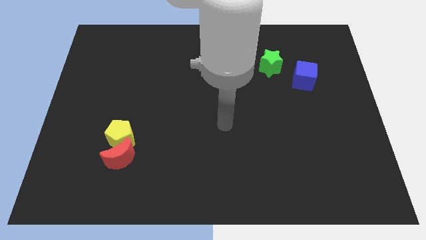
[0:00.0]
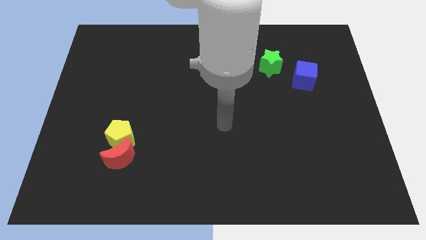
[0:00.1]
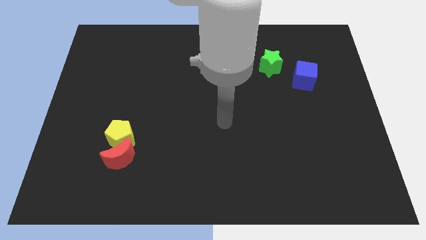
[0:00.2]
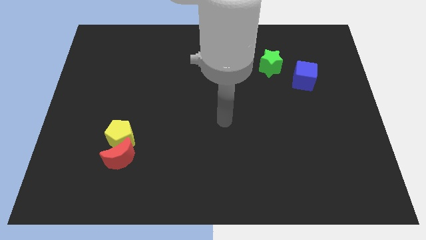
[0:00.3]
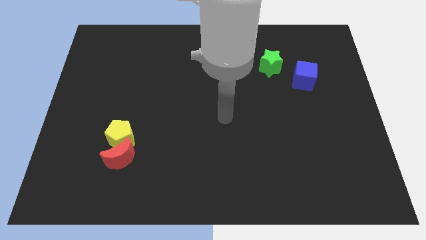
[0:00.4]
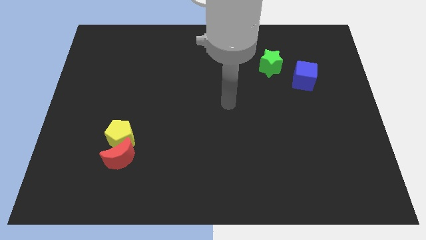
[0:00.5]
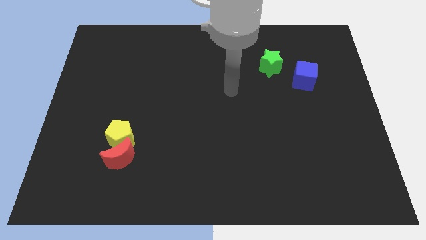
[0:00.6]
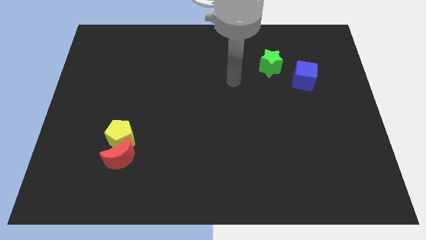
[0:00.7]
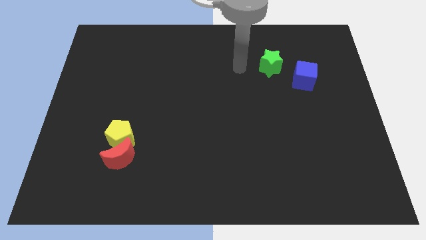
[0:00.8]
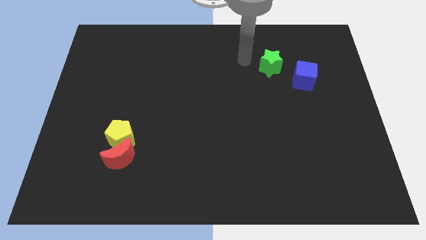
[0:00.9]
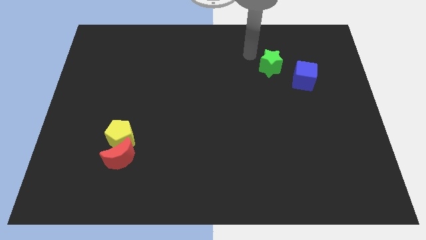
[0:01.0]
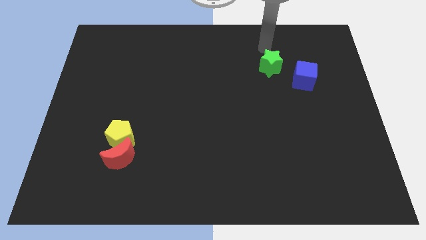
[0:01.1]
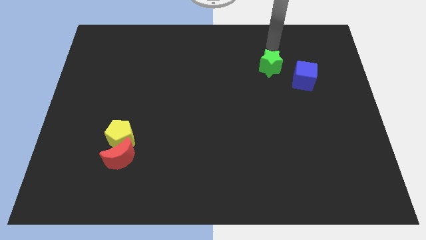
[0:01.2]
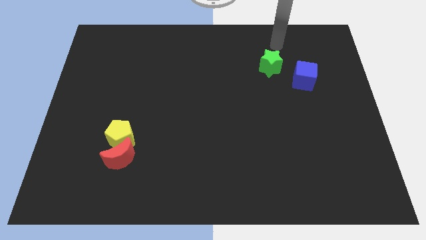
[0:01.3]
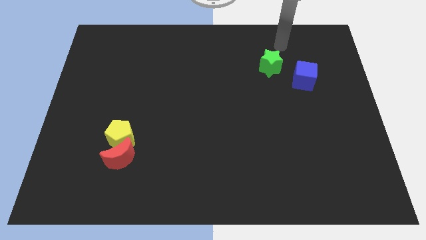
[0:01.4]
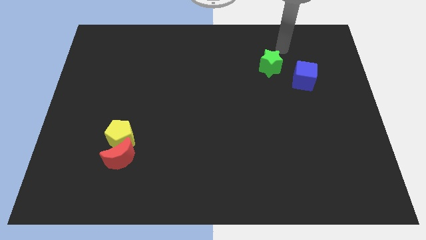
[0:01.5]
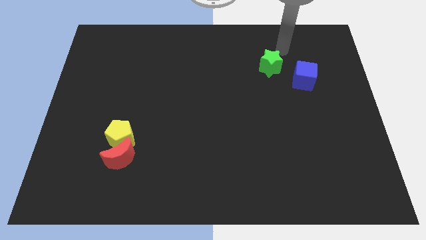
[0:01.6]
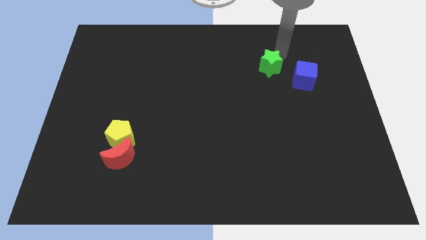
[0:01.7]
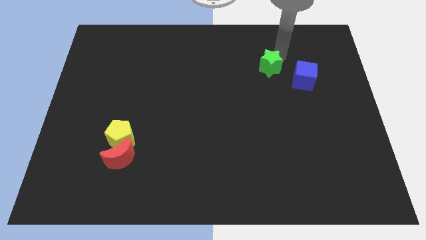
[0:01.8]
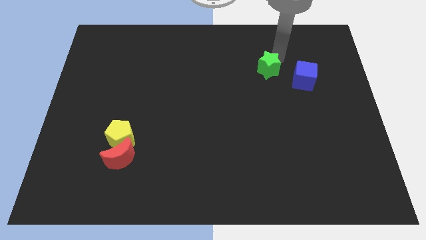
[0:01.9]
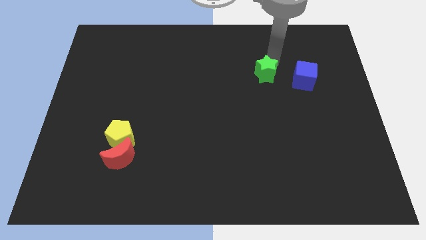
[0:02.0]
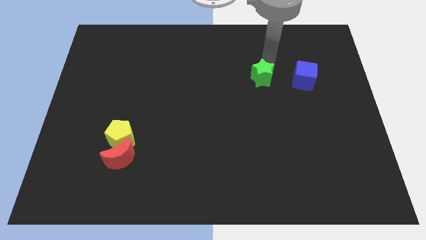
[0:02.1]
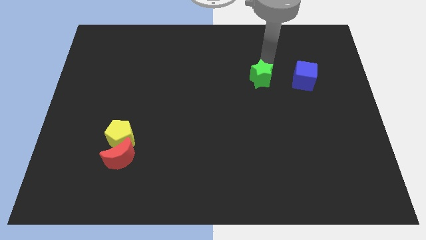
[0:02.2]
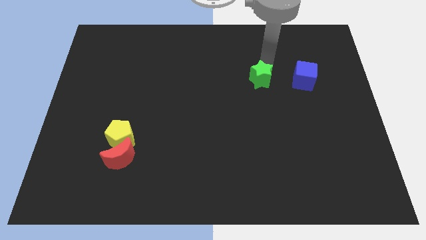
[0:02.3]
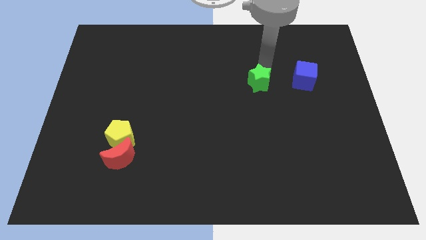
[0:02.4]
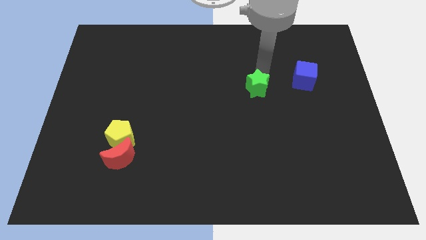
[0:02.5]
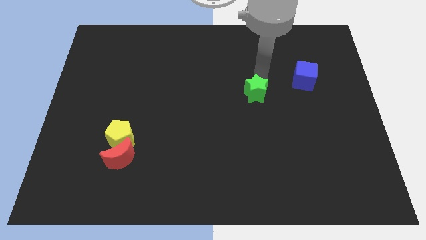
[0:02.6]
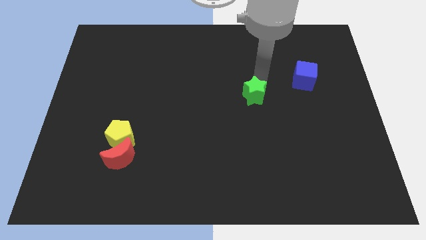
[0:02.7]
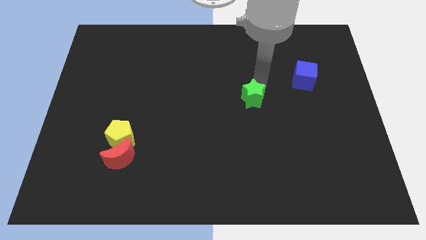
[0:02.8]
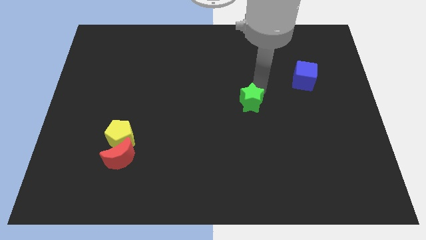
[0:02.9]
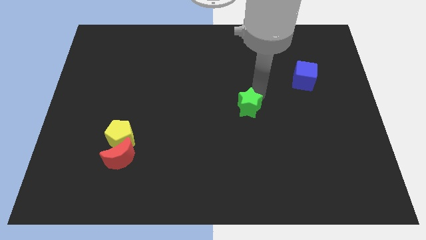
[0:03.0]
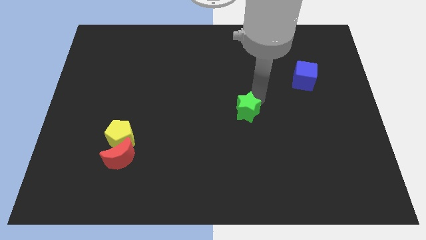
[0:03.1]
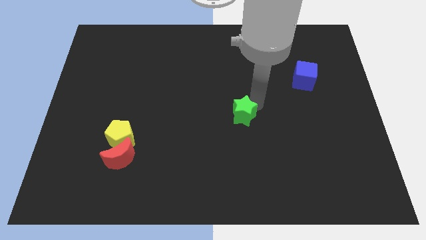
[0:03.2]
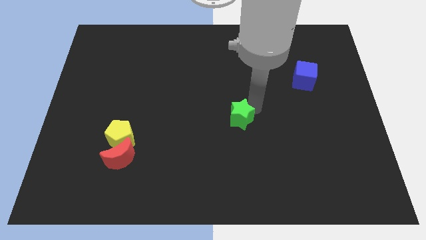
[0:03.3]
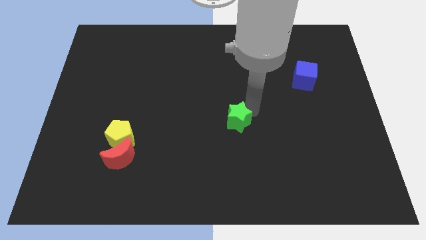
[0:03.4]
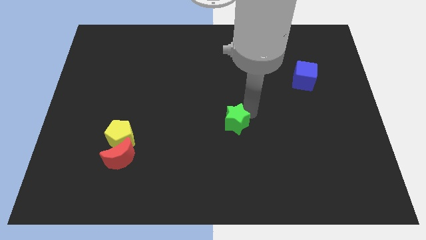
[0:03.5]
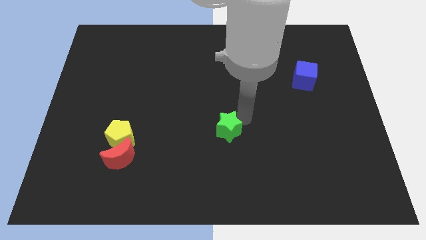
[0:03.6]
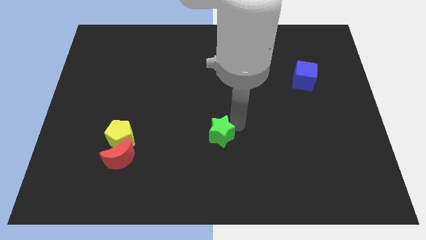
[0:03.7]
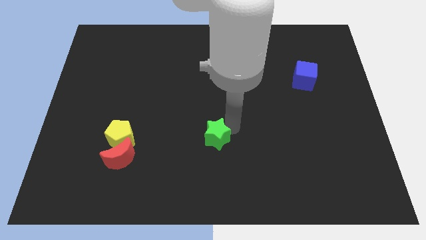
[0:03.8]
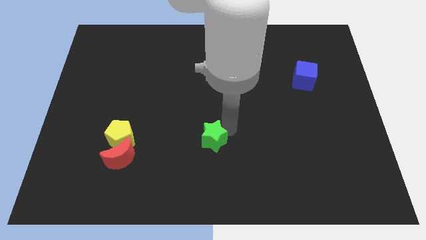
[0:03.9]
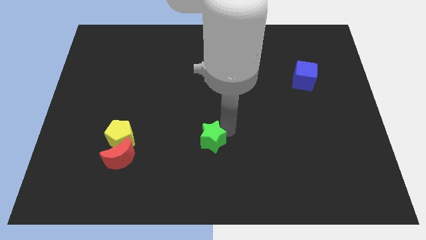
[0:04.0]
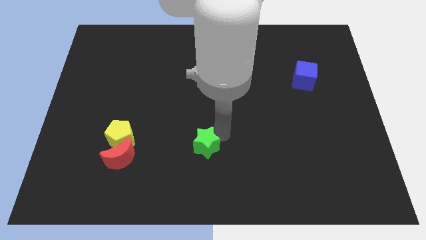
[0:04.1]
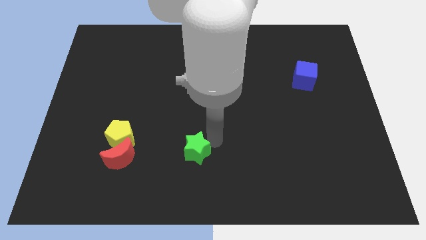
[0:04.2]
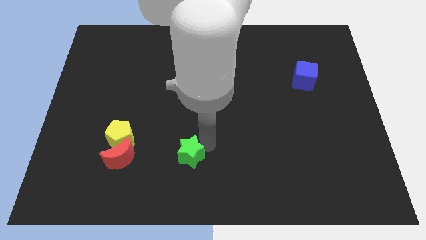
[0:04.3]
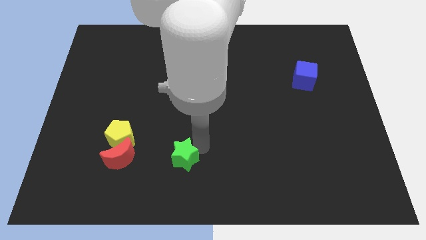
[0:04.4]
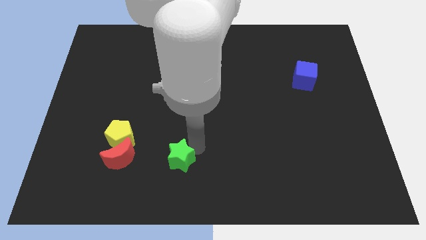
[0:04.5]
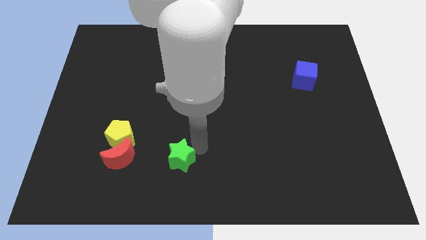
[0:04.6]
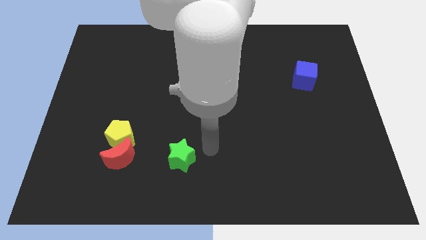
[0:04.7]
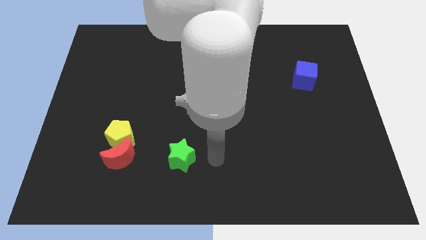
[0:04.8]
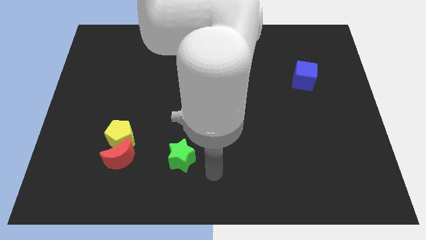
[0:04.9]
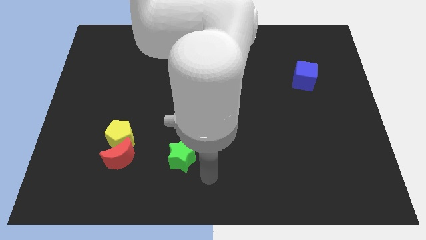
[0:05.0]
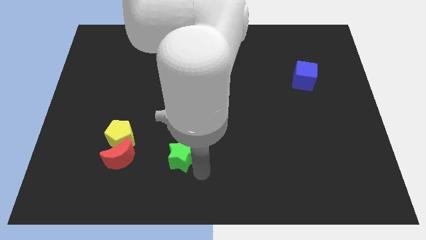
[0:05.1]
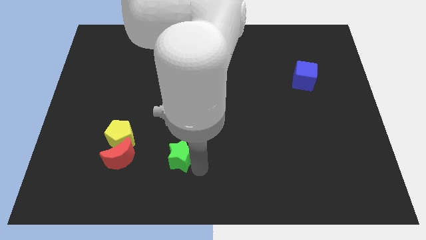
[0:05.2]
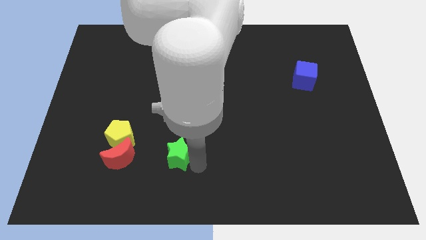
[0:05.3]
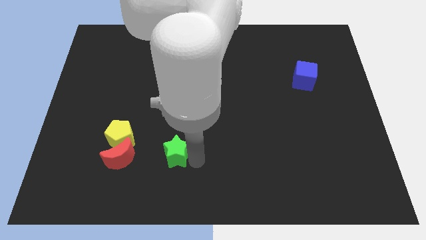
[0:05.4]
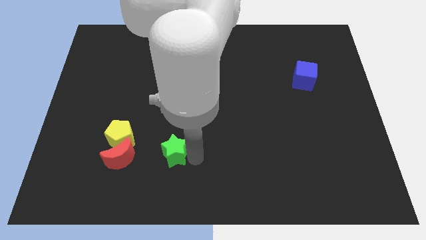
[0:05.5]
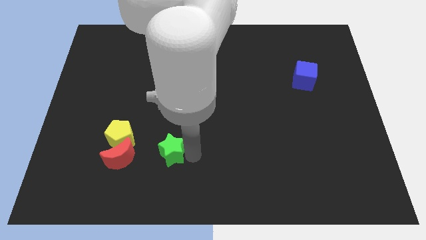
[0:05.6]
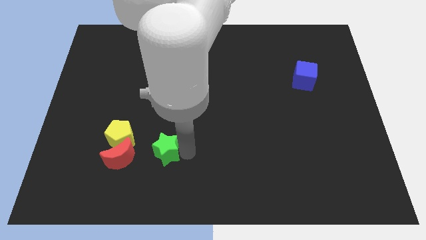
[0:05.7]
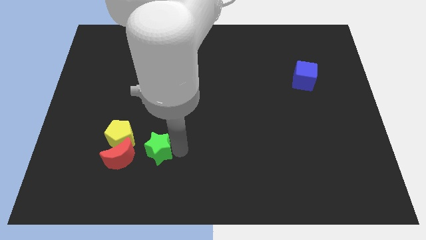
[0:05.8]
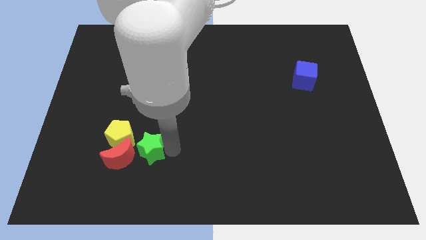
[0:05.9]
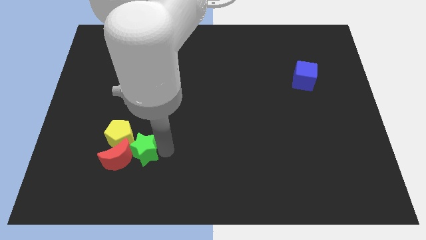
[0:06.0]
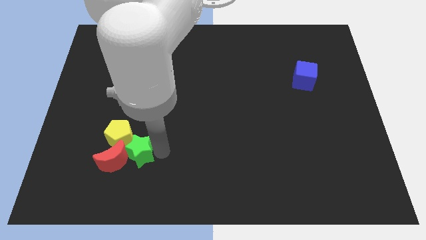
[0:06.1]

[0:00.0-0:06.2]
move the star to the red block

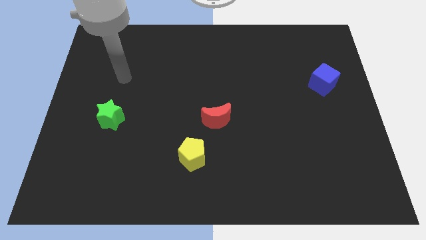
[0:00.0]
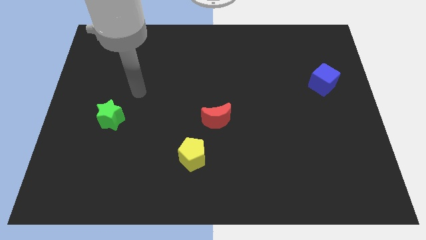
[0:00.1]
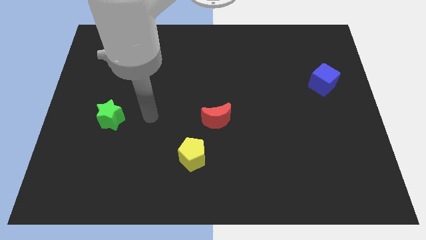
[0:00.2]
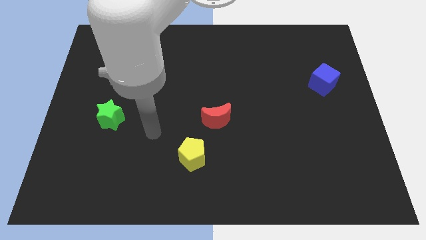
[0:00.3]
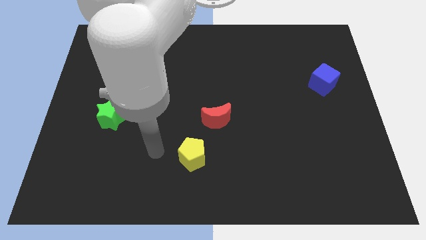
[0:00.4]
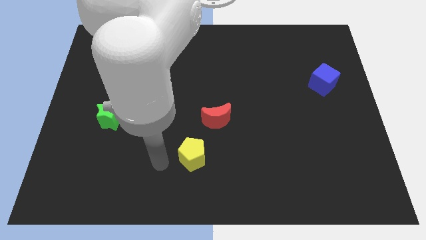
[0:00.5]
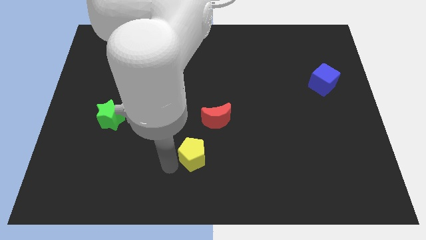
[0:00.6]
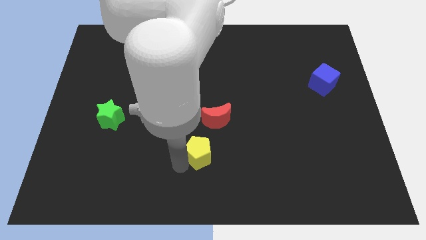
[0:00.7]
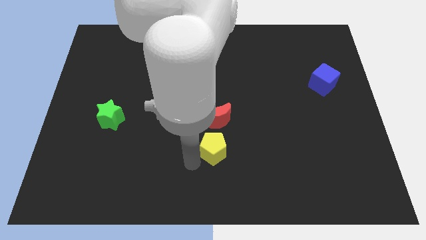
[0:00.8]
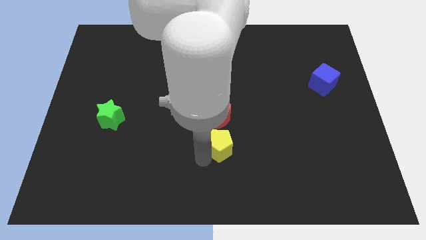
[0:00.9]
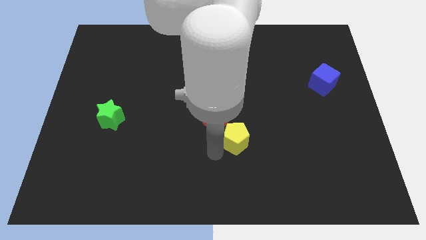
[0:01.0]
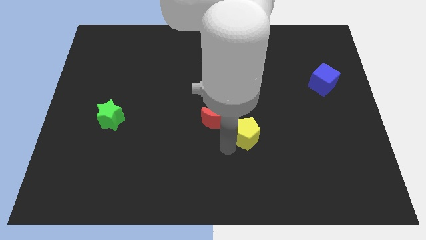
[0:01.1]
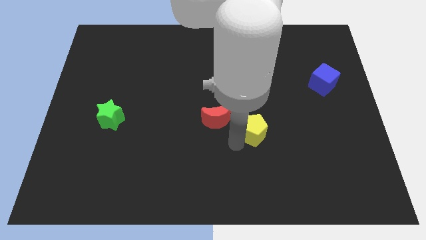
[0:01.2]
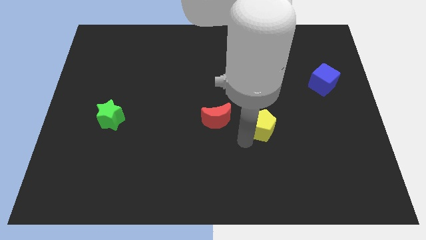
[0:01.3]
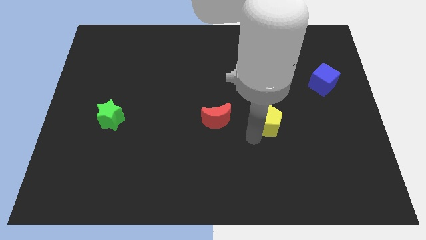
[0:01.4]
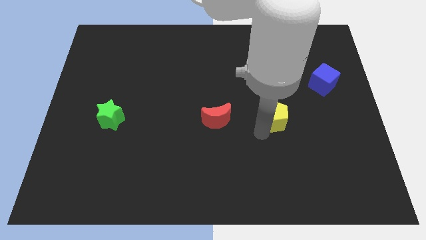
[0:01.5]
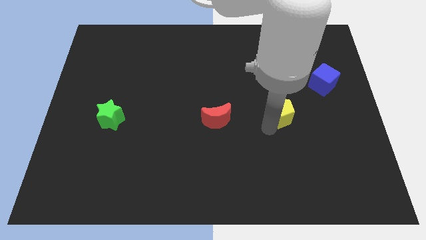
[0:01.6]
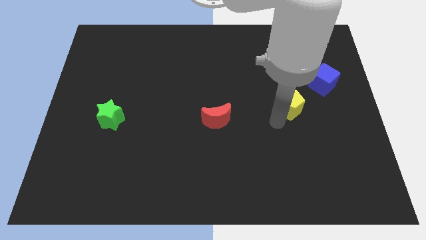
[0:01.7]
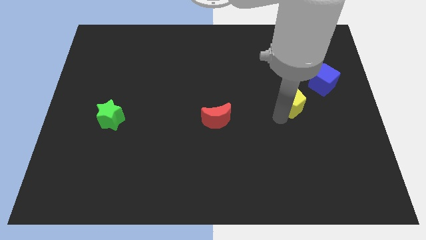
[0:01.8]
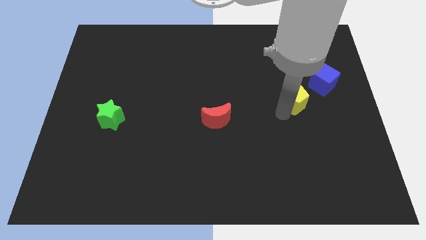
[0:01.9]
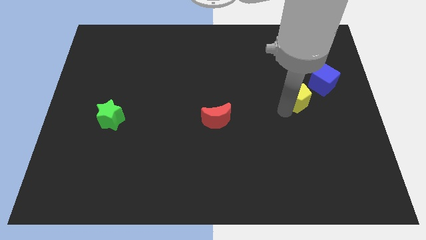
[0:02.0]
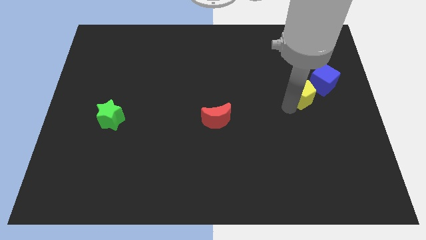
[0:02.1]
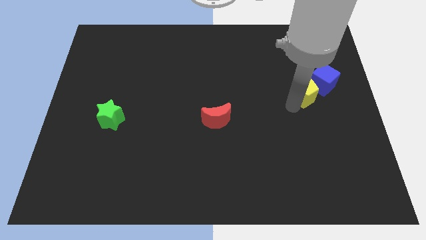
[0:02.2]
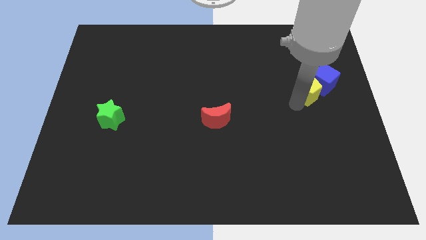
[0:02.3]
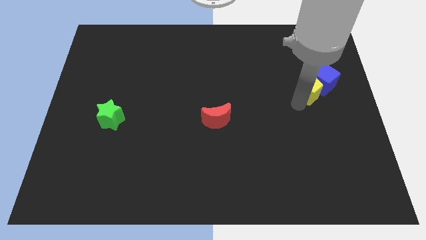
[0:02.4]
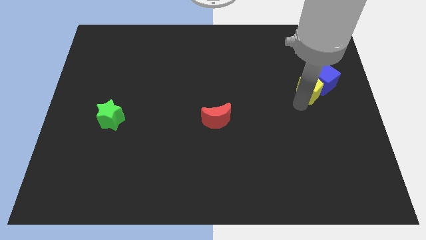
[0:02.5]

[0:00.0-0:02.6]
move the pentagon next to the blue block
